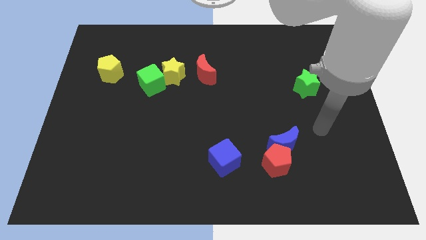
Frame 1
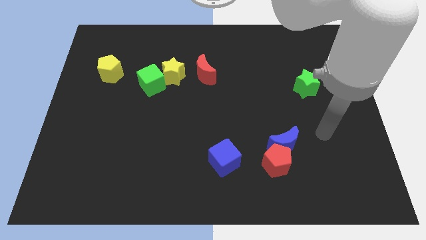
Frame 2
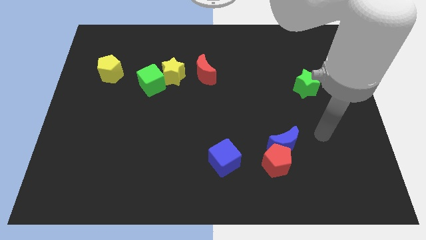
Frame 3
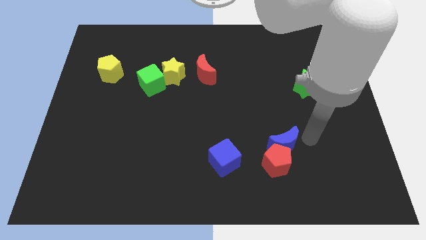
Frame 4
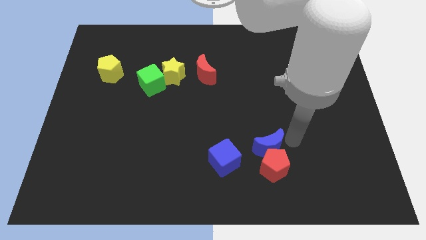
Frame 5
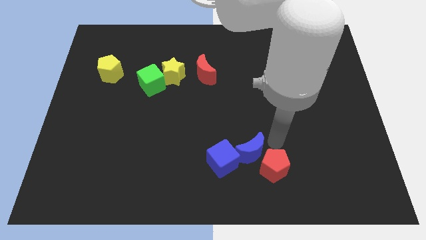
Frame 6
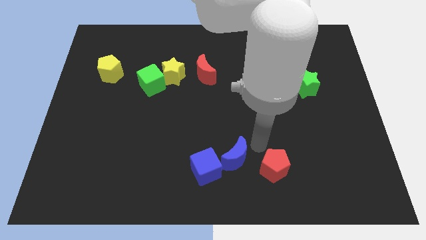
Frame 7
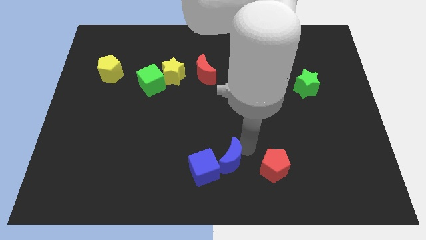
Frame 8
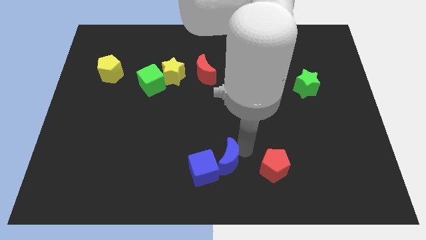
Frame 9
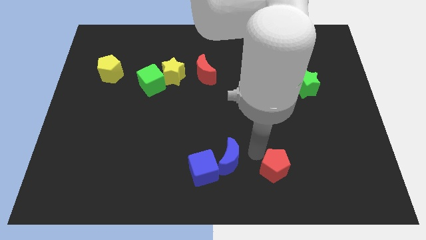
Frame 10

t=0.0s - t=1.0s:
push the blue moon into blue cube

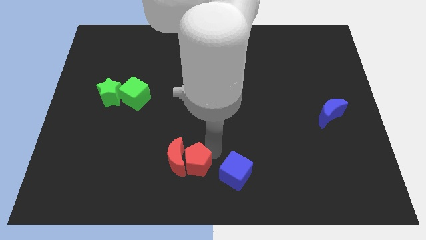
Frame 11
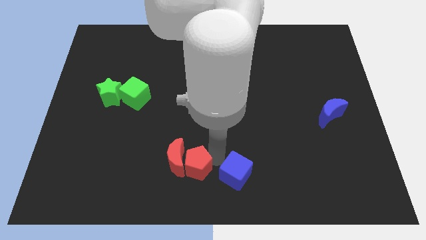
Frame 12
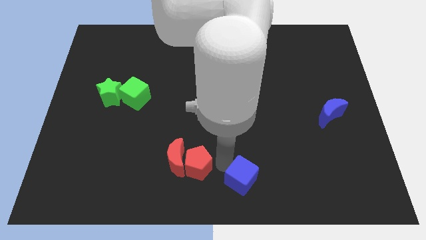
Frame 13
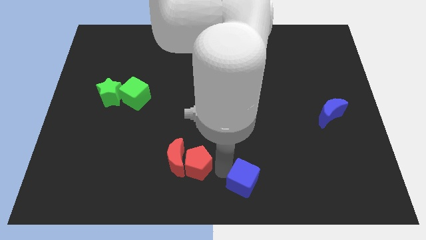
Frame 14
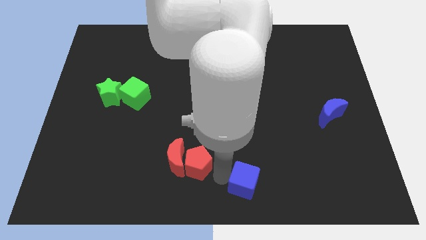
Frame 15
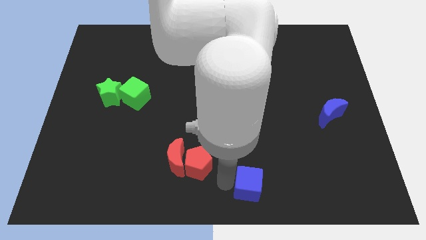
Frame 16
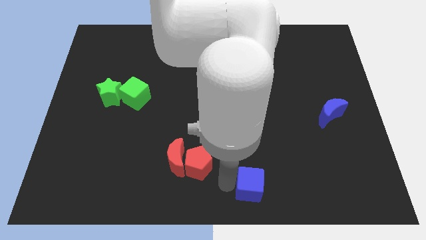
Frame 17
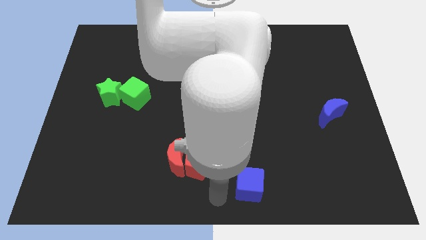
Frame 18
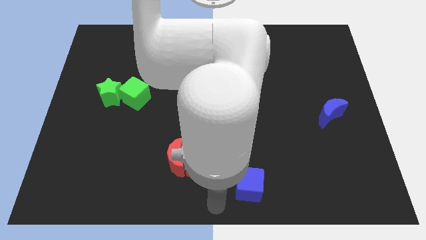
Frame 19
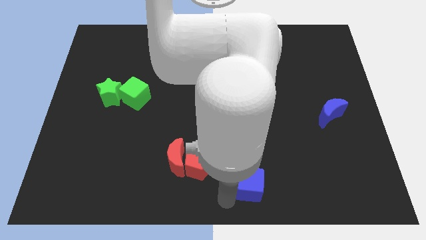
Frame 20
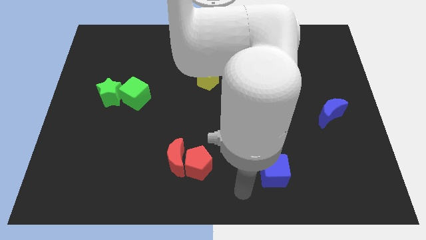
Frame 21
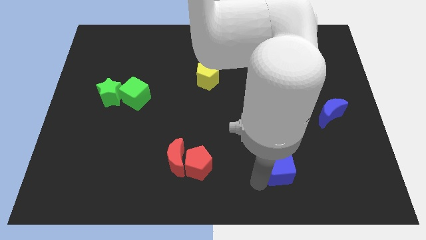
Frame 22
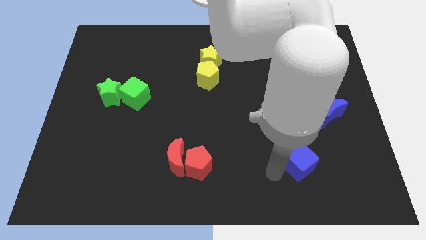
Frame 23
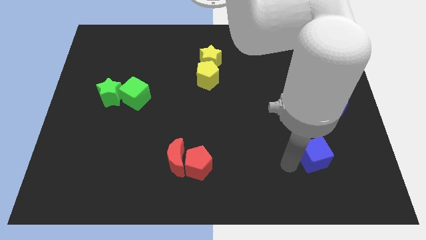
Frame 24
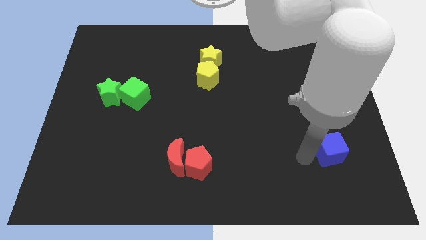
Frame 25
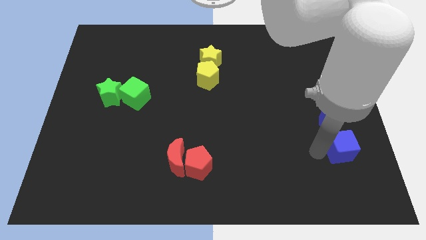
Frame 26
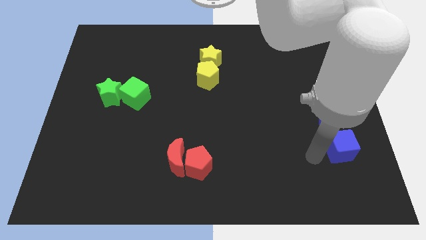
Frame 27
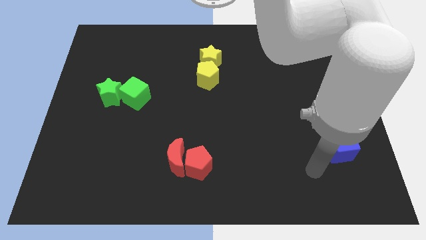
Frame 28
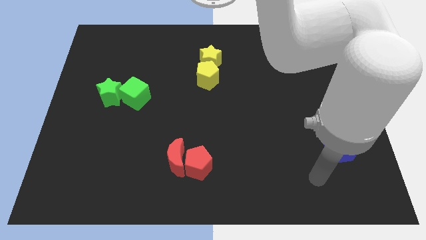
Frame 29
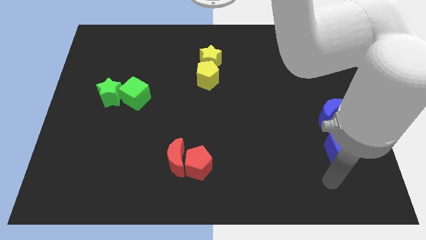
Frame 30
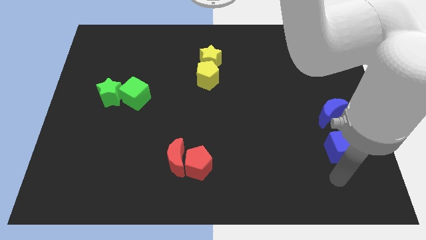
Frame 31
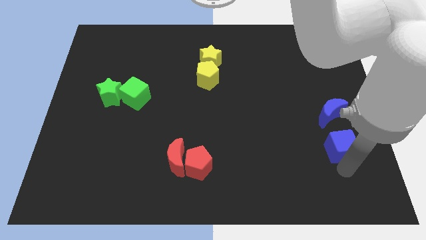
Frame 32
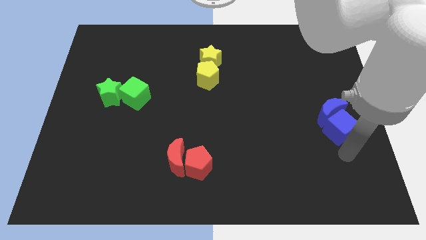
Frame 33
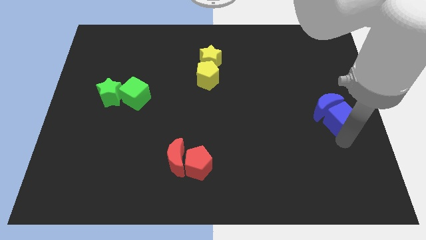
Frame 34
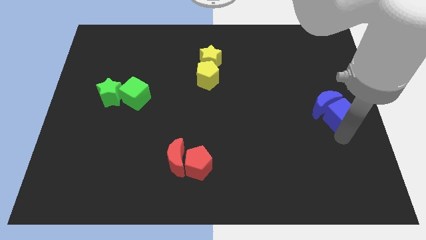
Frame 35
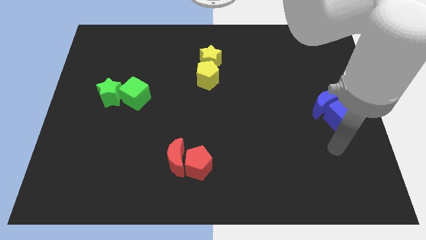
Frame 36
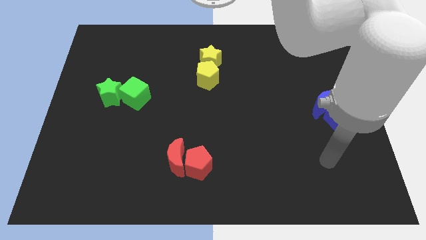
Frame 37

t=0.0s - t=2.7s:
push the blue cube into the blue crescent

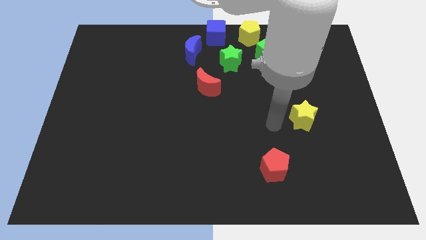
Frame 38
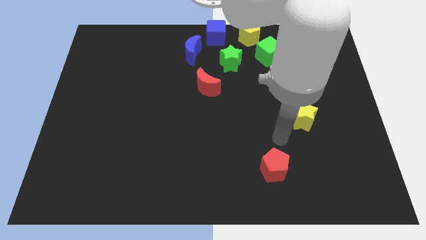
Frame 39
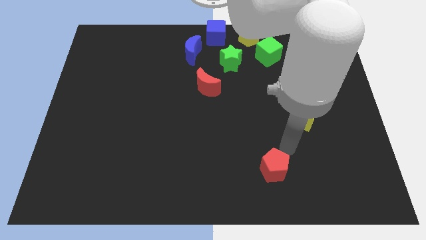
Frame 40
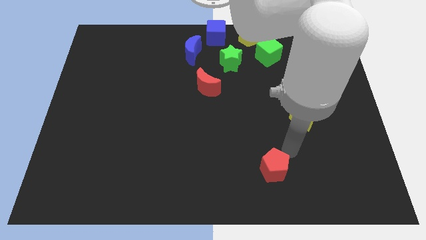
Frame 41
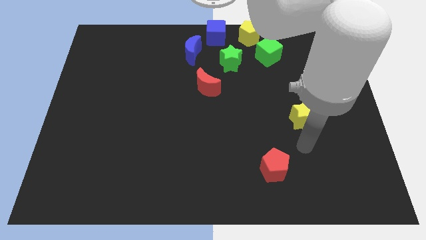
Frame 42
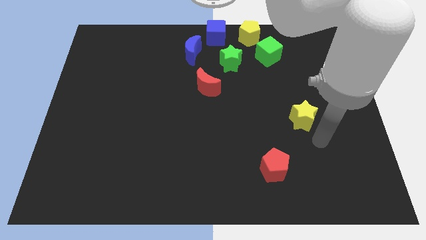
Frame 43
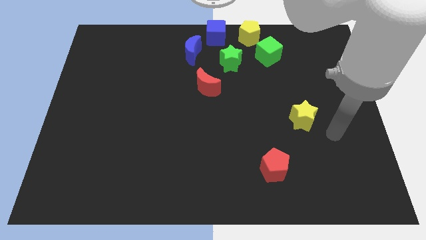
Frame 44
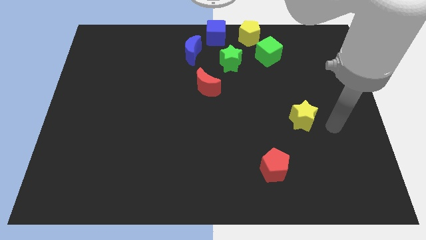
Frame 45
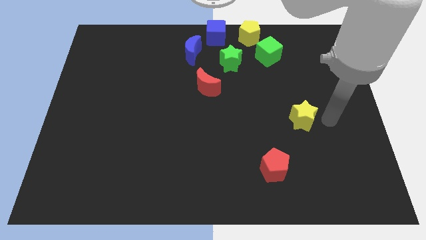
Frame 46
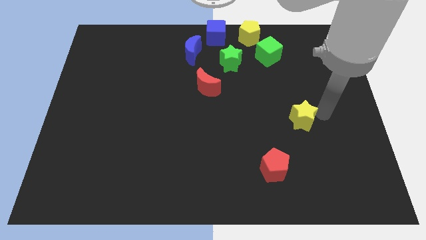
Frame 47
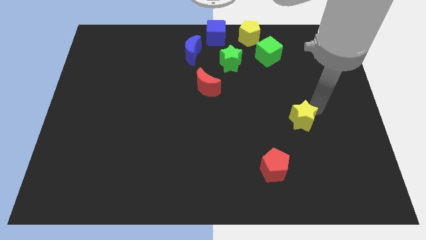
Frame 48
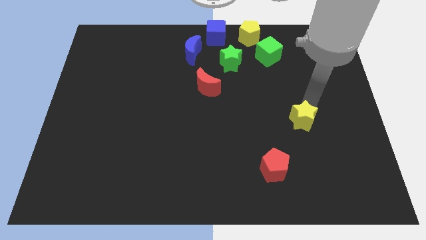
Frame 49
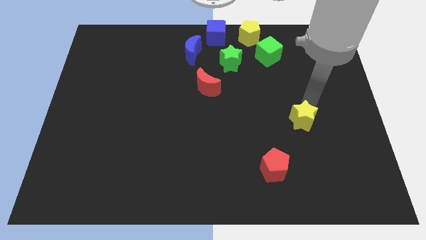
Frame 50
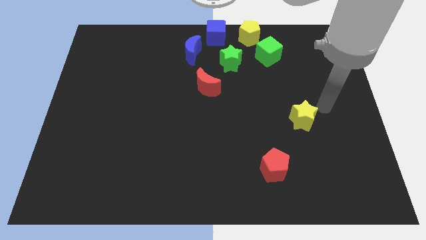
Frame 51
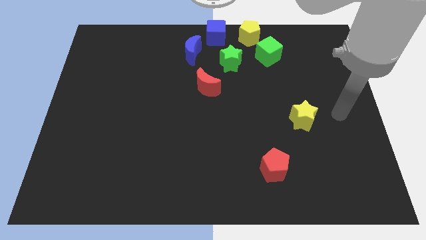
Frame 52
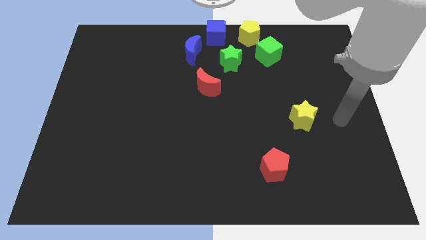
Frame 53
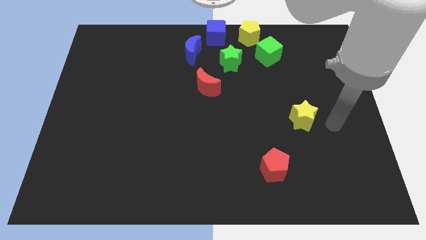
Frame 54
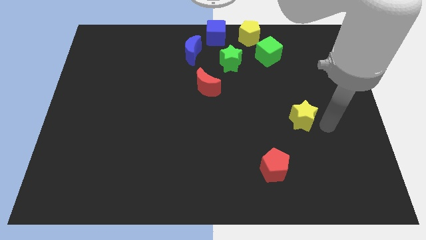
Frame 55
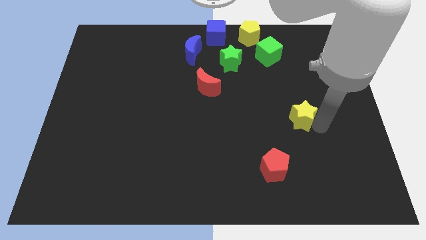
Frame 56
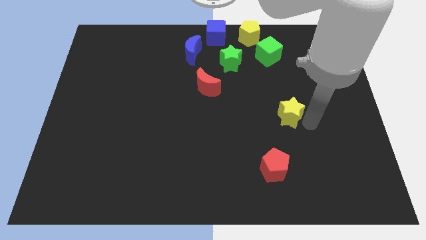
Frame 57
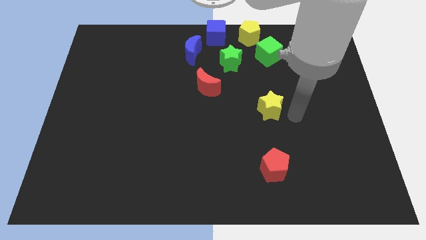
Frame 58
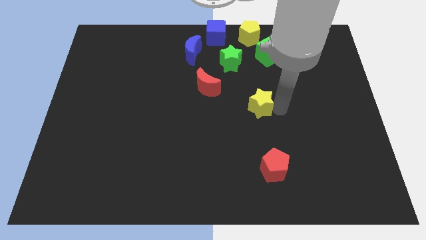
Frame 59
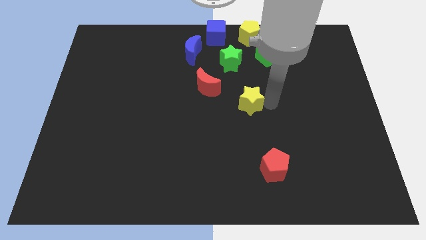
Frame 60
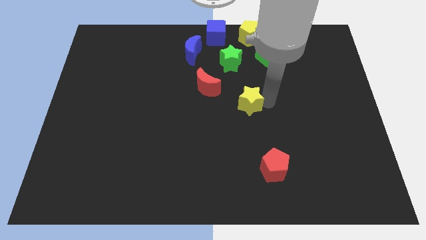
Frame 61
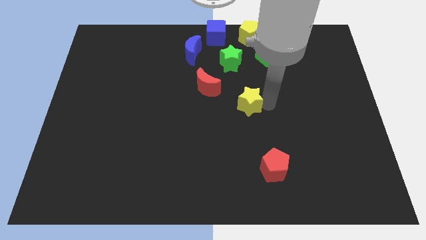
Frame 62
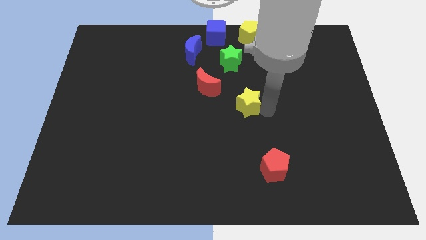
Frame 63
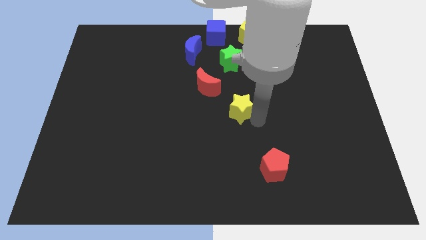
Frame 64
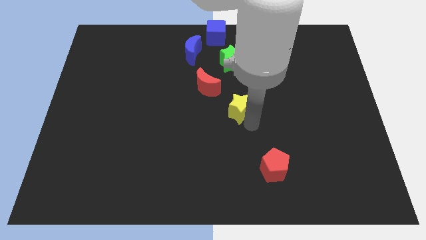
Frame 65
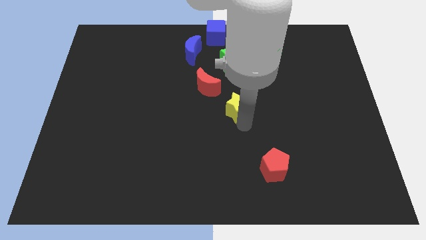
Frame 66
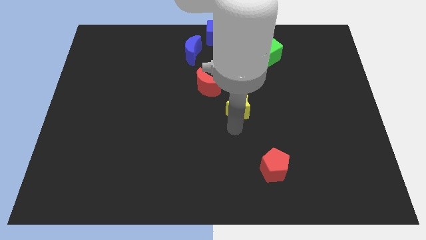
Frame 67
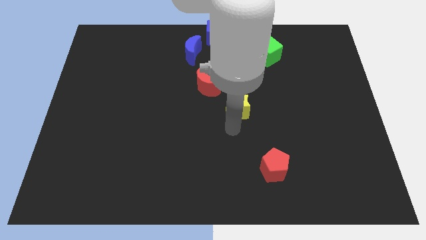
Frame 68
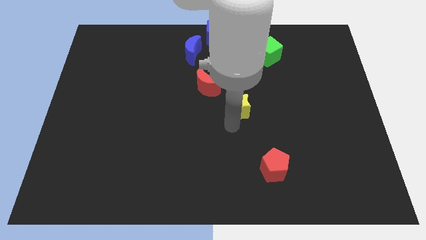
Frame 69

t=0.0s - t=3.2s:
place the yellow star vertical to the green star

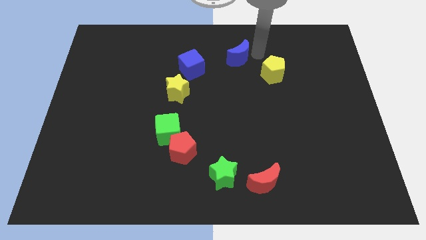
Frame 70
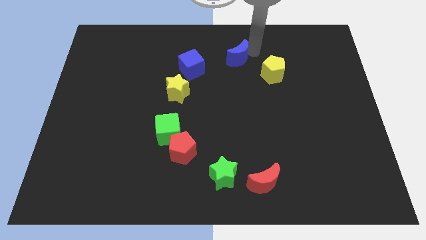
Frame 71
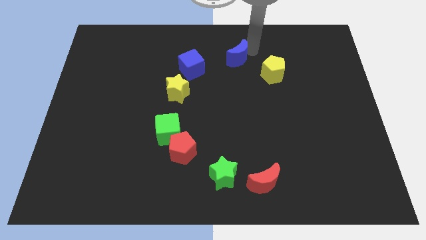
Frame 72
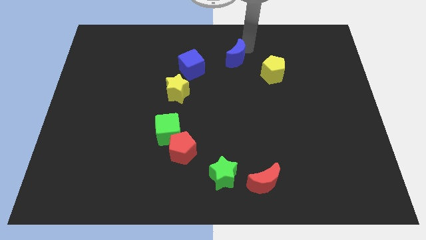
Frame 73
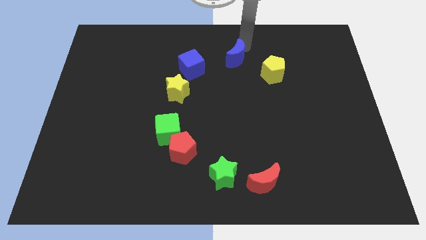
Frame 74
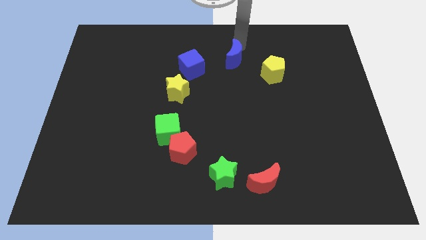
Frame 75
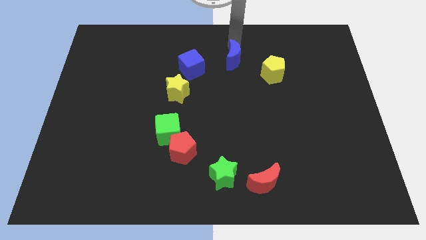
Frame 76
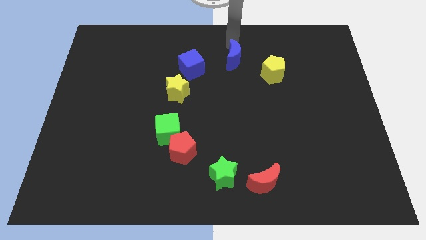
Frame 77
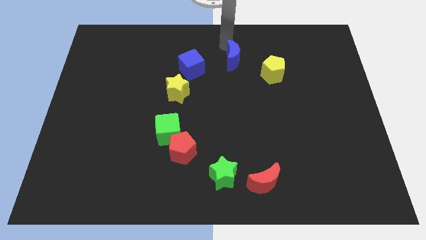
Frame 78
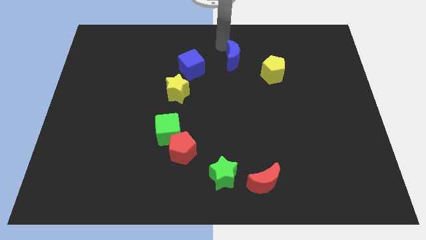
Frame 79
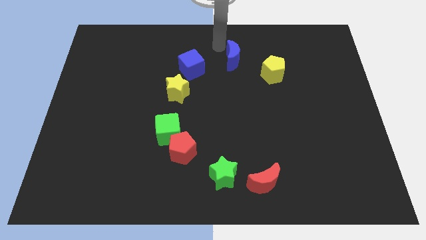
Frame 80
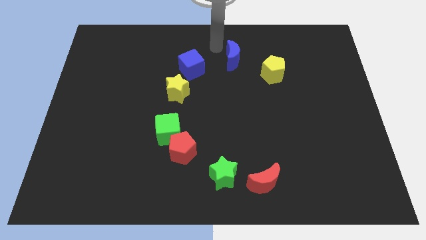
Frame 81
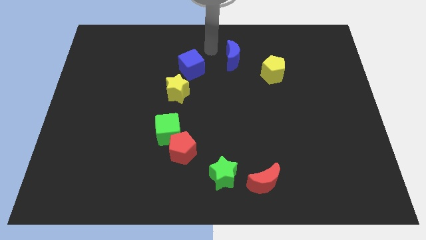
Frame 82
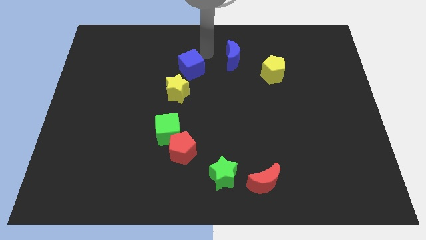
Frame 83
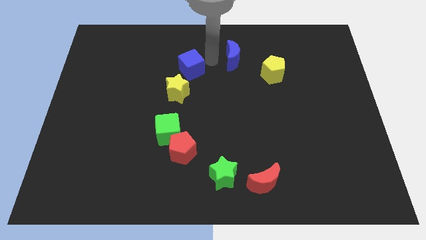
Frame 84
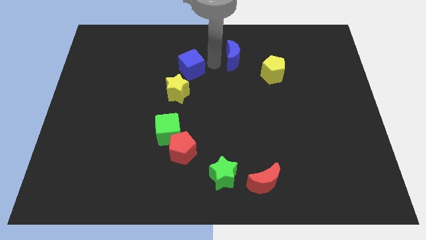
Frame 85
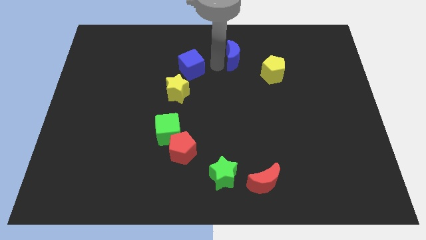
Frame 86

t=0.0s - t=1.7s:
slightly move the blue moon towards the left

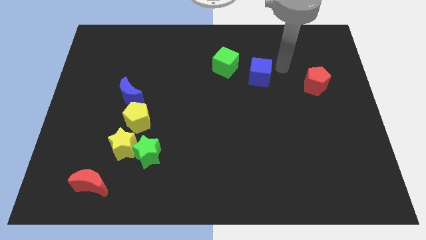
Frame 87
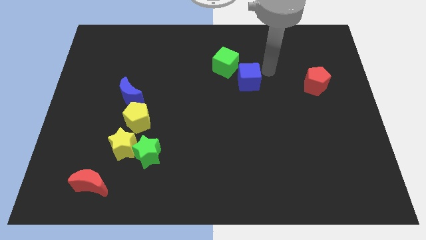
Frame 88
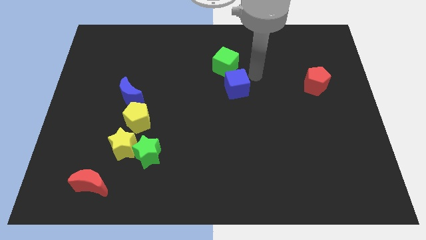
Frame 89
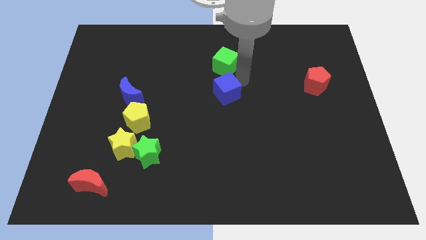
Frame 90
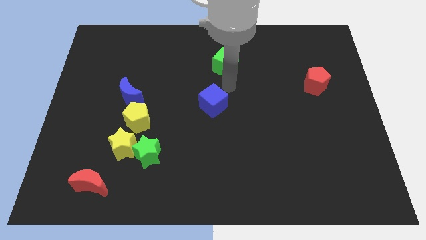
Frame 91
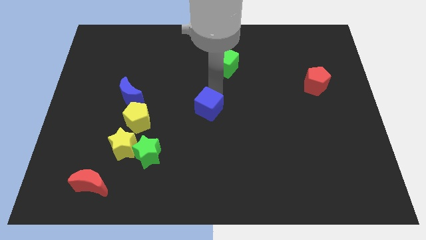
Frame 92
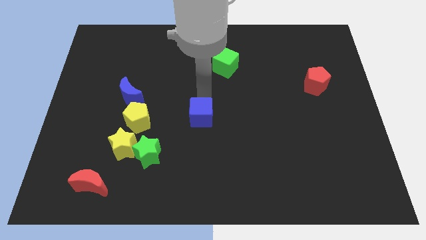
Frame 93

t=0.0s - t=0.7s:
push the blue cube to the center of the board
